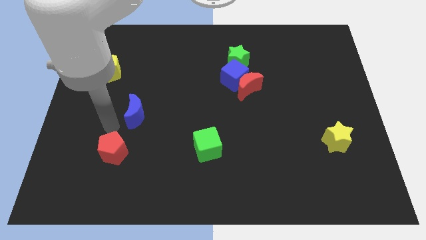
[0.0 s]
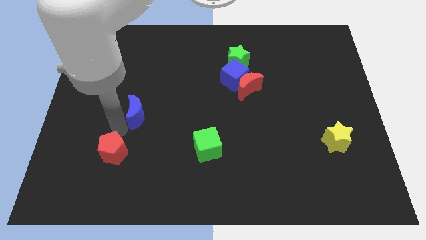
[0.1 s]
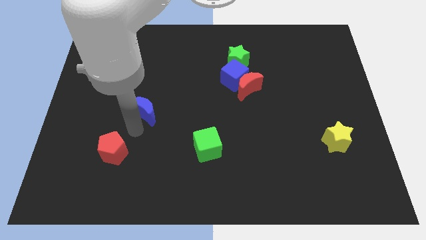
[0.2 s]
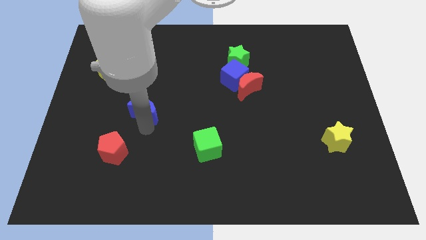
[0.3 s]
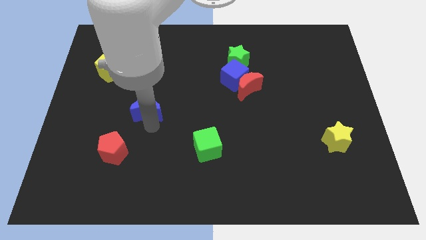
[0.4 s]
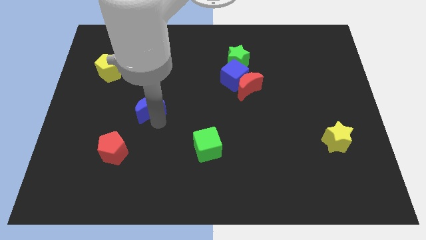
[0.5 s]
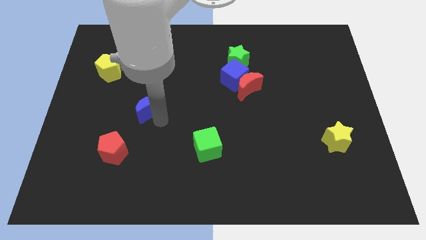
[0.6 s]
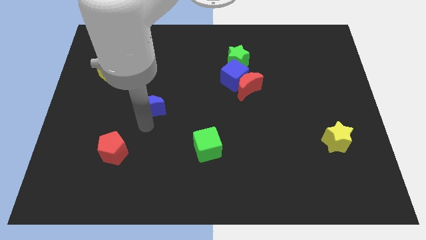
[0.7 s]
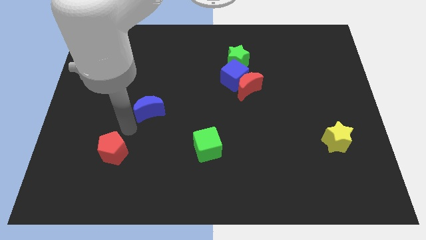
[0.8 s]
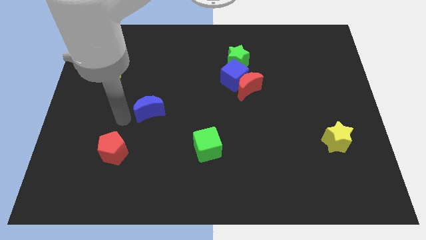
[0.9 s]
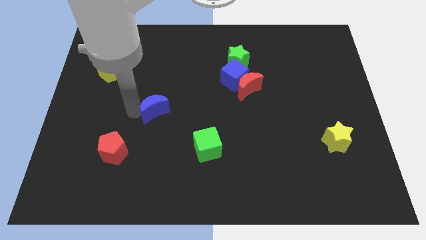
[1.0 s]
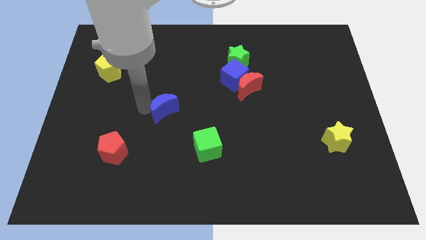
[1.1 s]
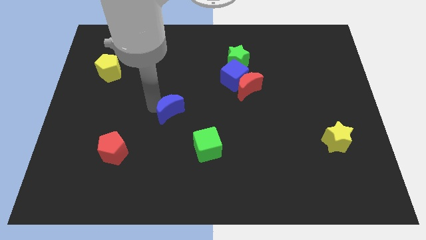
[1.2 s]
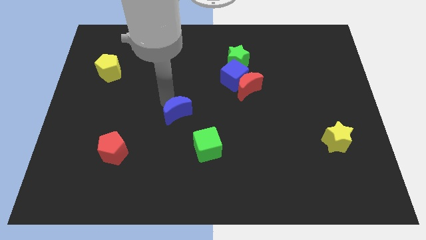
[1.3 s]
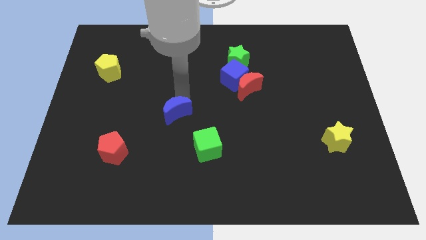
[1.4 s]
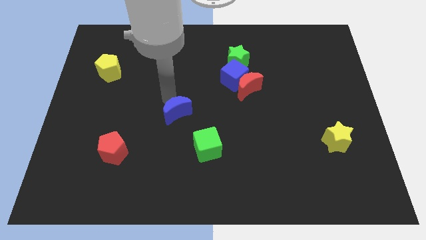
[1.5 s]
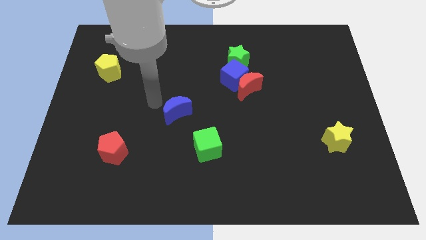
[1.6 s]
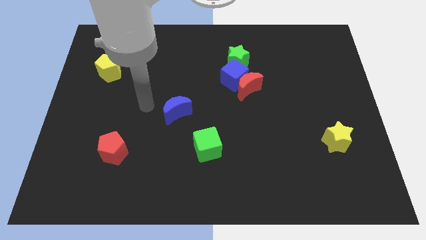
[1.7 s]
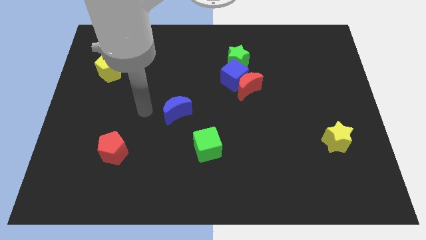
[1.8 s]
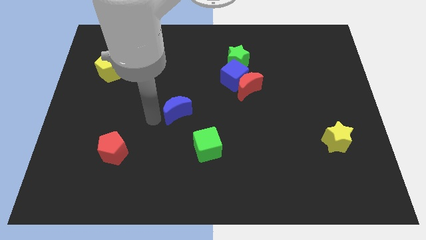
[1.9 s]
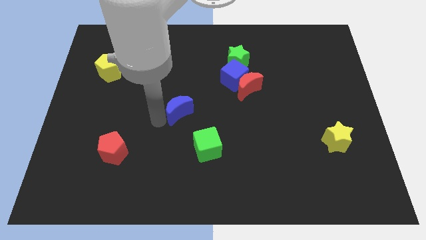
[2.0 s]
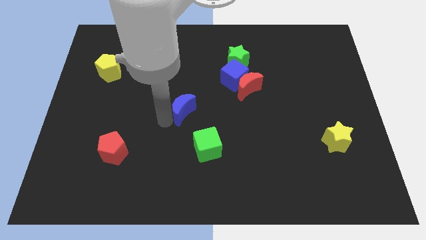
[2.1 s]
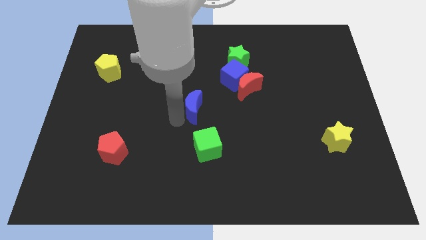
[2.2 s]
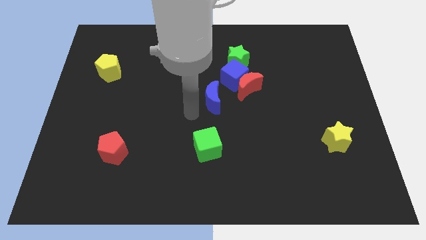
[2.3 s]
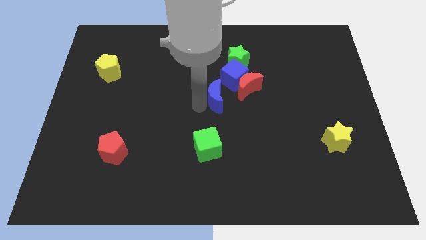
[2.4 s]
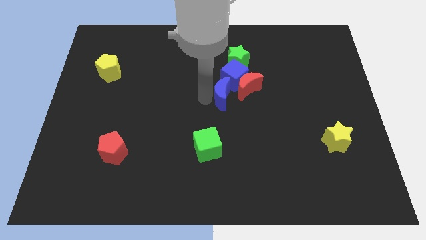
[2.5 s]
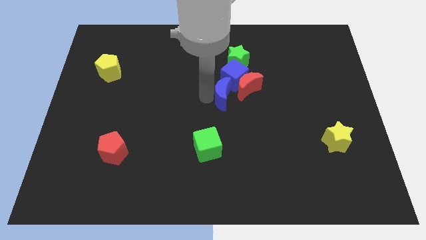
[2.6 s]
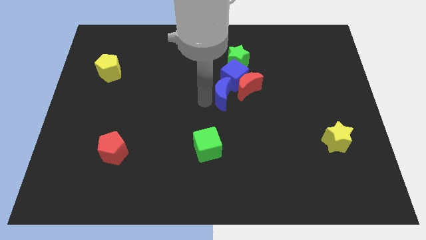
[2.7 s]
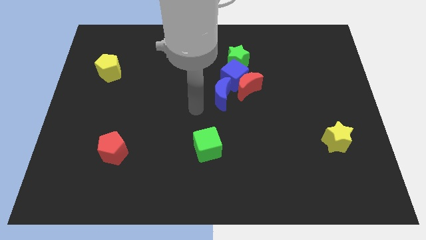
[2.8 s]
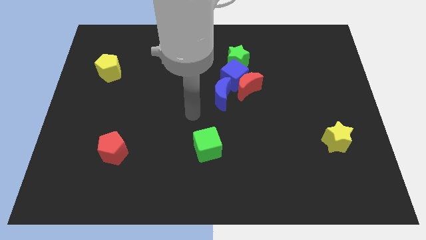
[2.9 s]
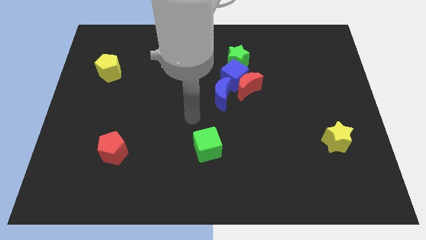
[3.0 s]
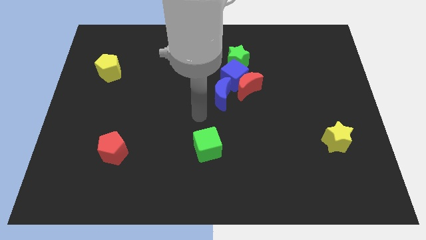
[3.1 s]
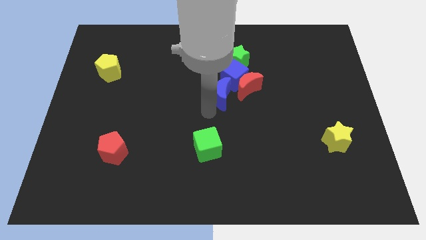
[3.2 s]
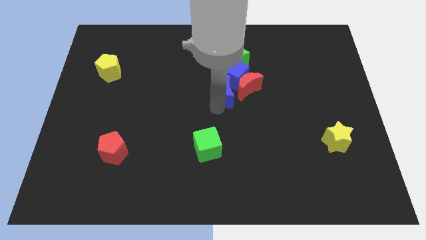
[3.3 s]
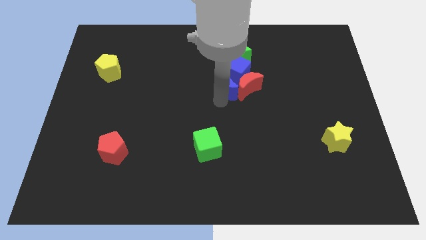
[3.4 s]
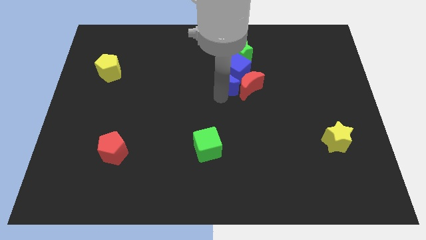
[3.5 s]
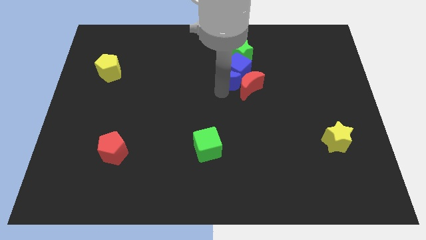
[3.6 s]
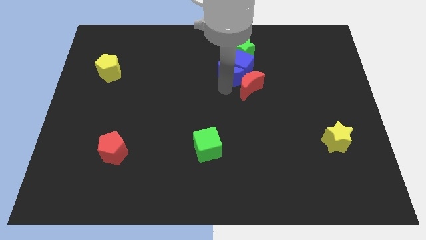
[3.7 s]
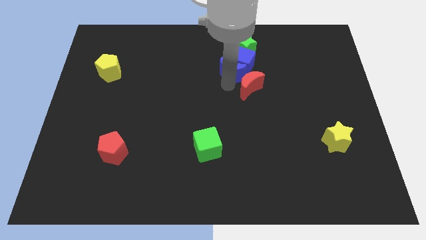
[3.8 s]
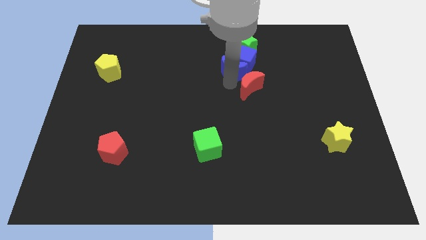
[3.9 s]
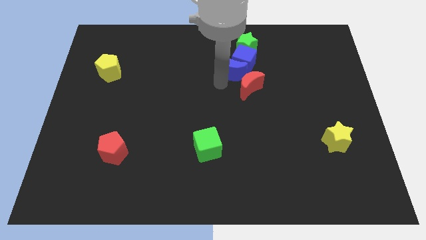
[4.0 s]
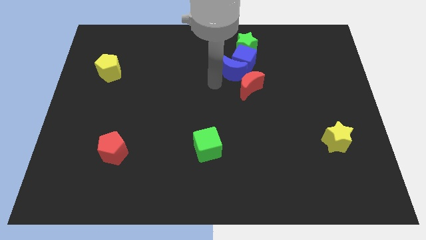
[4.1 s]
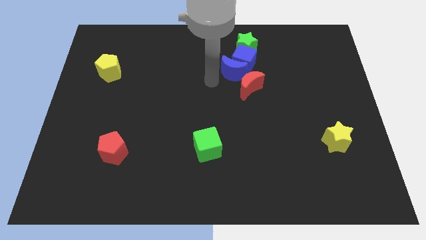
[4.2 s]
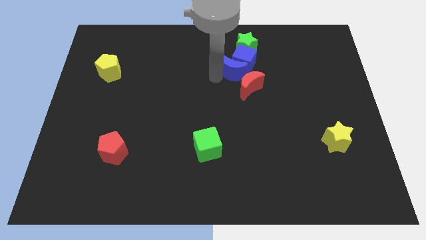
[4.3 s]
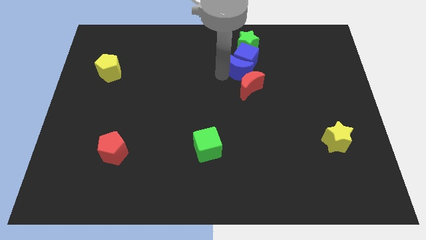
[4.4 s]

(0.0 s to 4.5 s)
move the blue moon into the blue cube

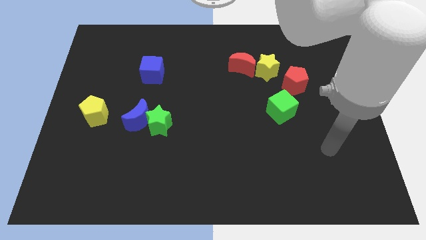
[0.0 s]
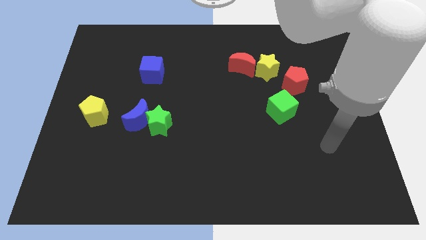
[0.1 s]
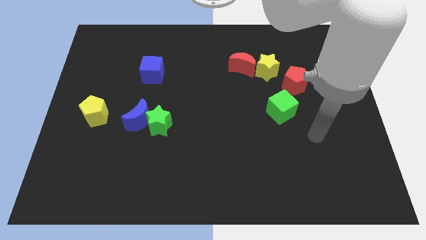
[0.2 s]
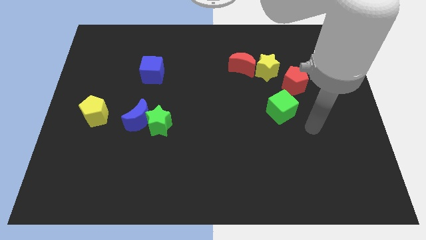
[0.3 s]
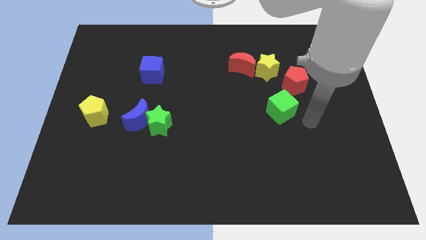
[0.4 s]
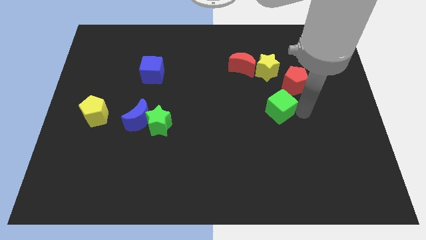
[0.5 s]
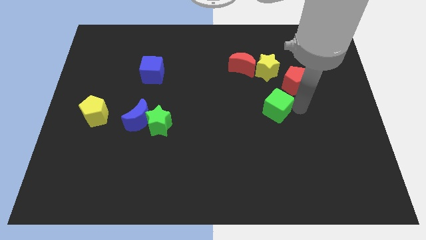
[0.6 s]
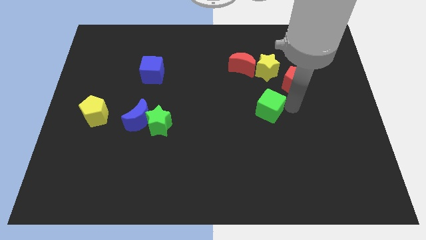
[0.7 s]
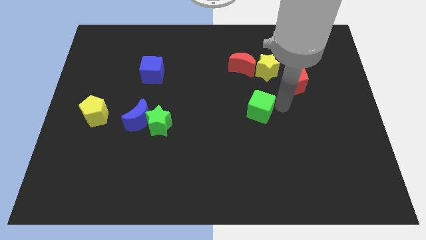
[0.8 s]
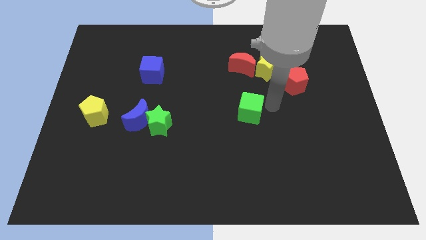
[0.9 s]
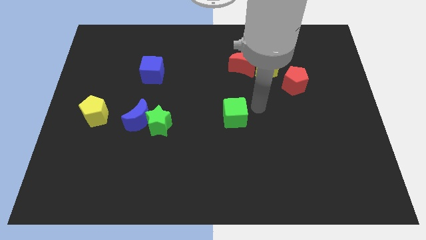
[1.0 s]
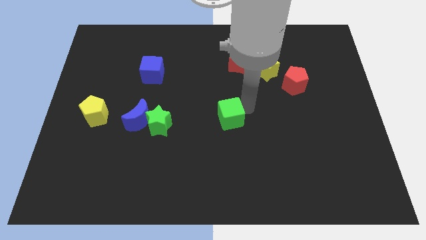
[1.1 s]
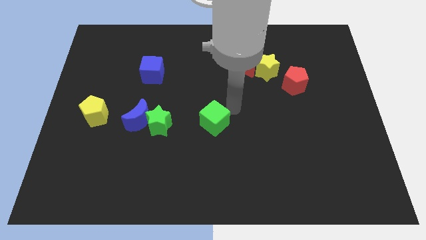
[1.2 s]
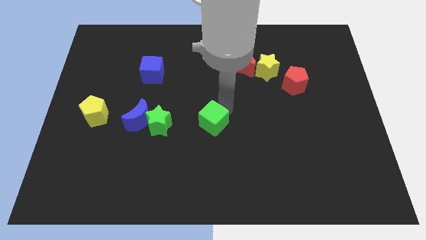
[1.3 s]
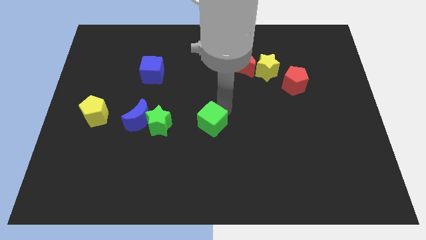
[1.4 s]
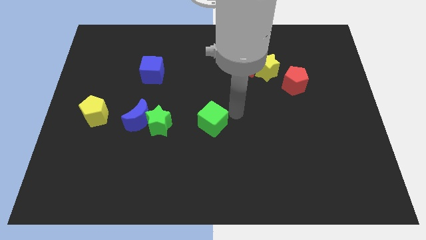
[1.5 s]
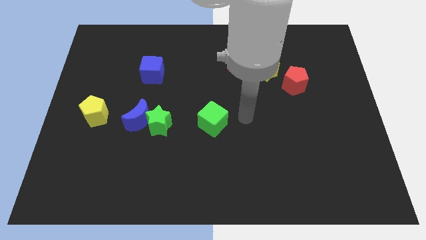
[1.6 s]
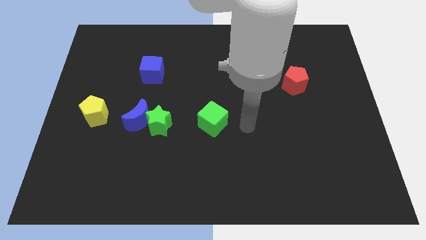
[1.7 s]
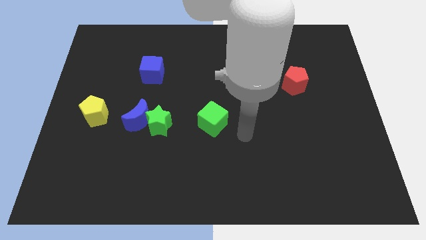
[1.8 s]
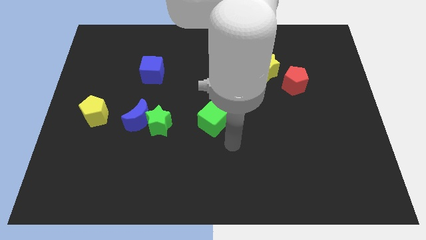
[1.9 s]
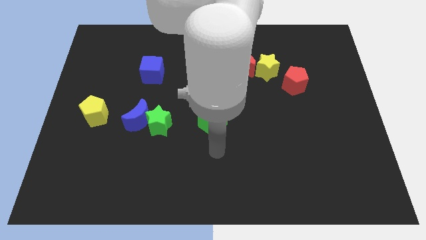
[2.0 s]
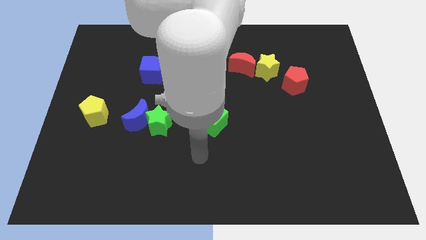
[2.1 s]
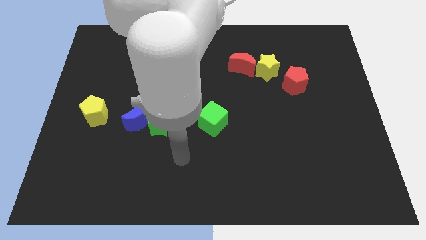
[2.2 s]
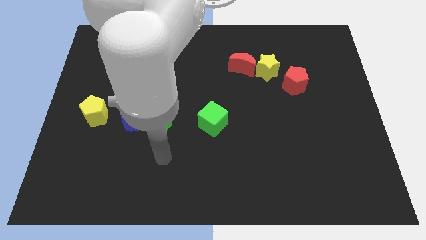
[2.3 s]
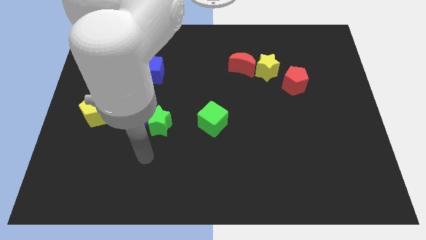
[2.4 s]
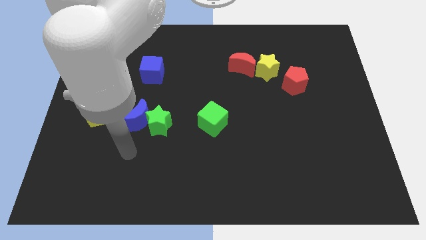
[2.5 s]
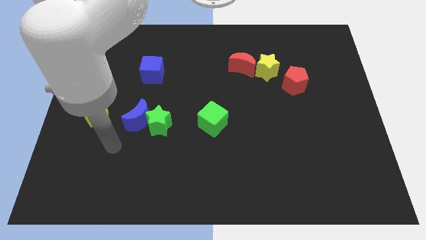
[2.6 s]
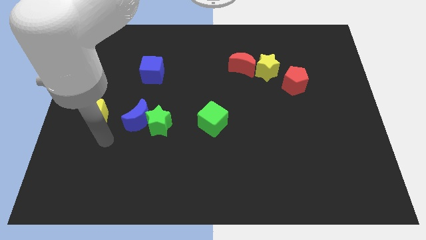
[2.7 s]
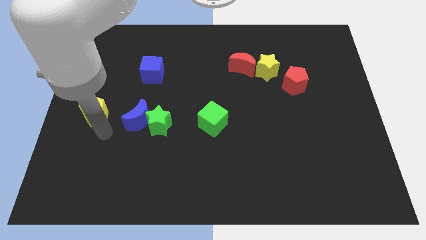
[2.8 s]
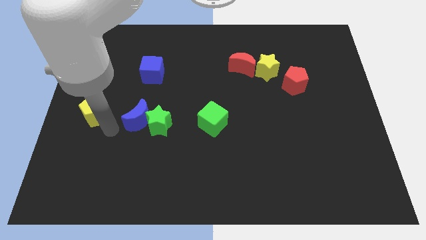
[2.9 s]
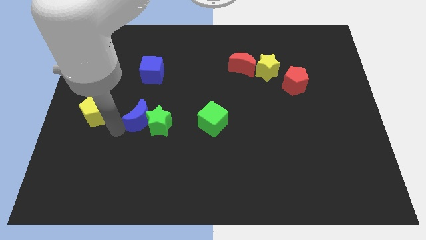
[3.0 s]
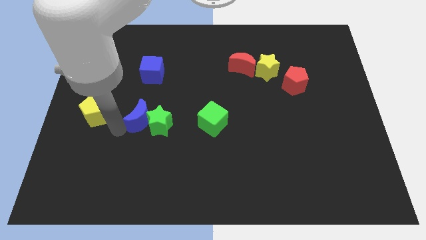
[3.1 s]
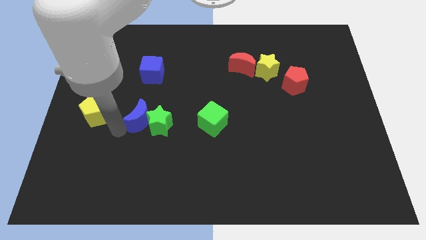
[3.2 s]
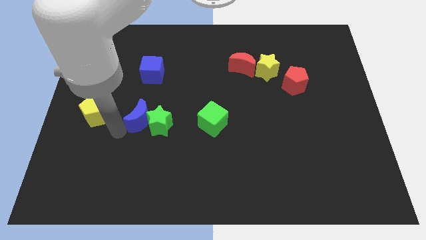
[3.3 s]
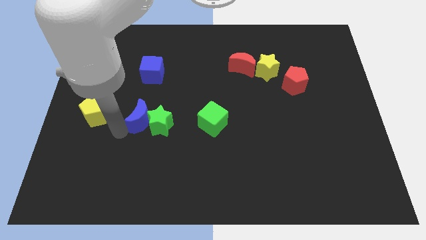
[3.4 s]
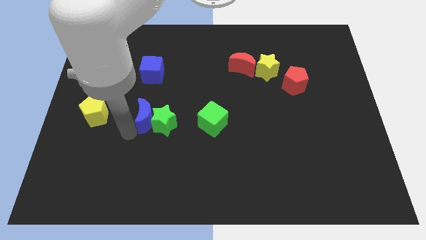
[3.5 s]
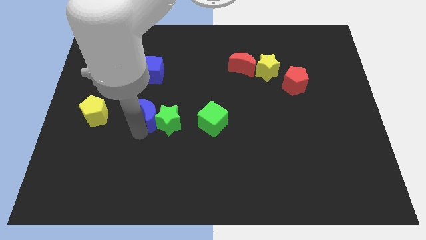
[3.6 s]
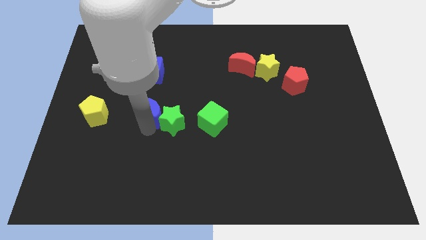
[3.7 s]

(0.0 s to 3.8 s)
move your arm close to the blue moon

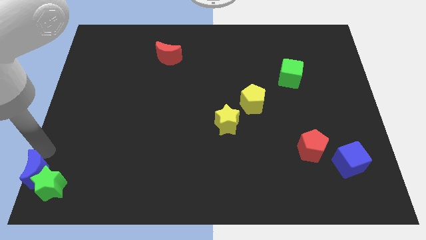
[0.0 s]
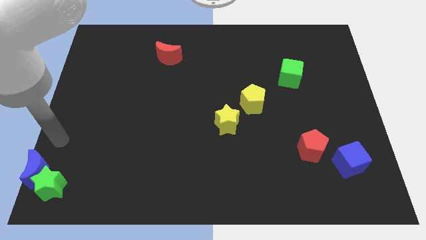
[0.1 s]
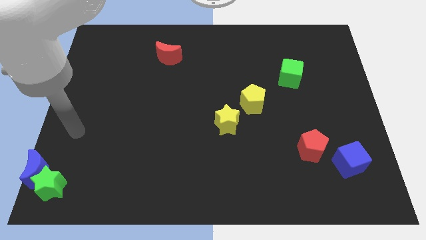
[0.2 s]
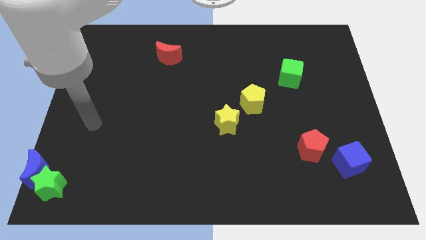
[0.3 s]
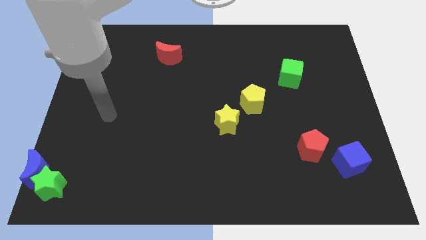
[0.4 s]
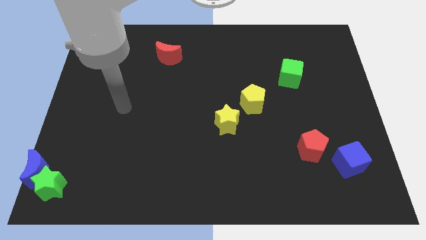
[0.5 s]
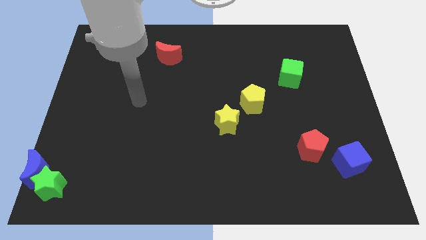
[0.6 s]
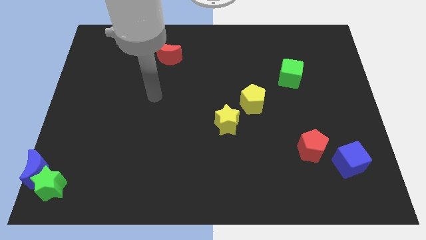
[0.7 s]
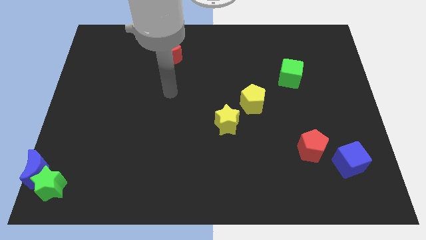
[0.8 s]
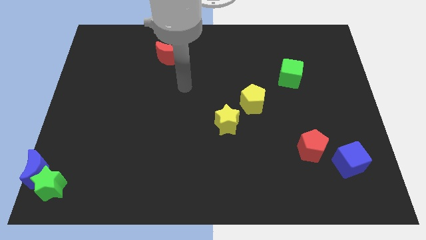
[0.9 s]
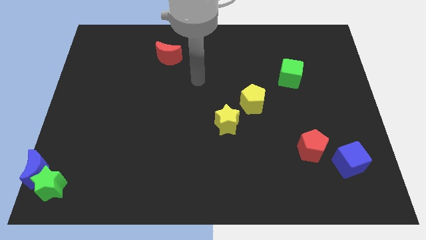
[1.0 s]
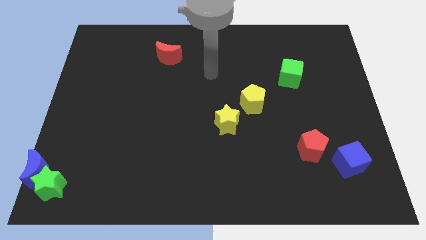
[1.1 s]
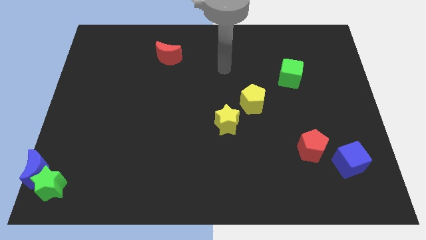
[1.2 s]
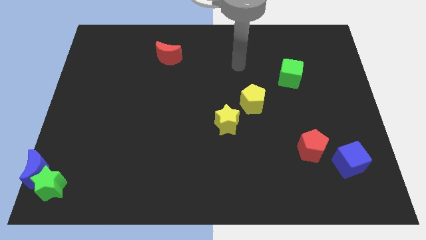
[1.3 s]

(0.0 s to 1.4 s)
move the arm away from the blue moon
